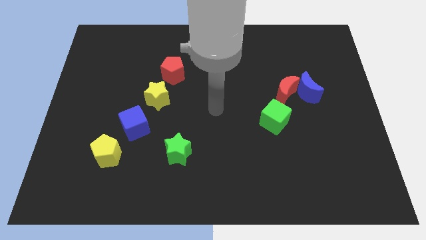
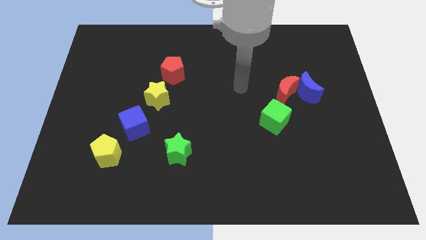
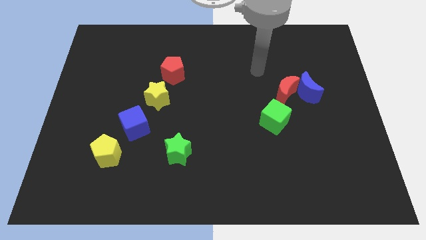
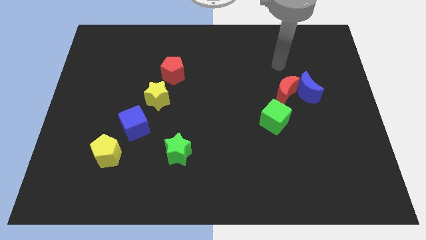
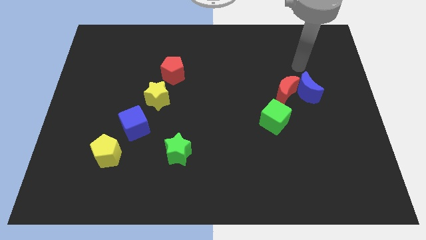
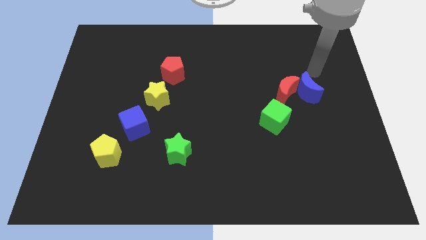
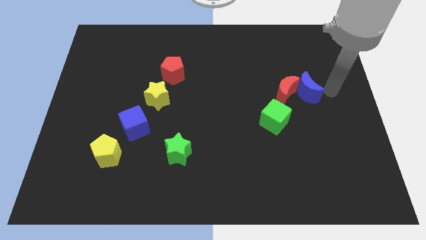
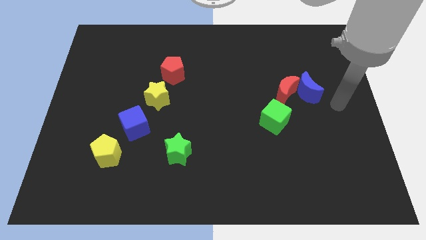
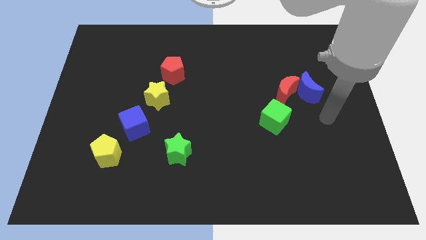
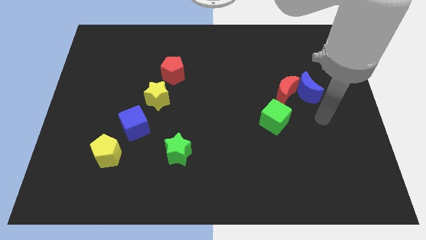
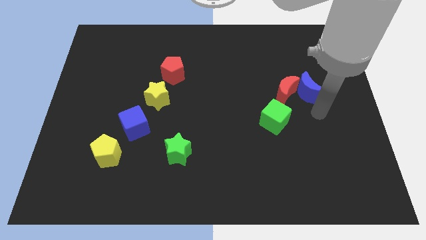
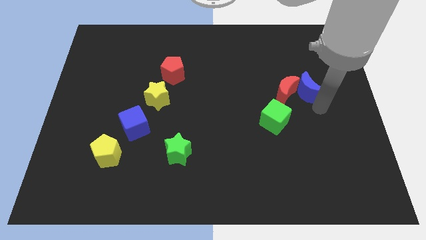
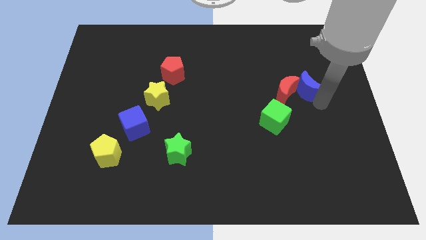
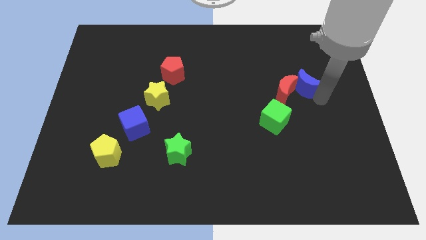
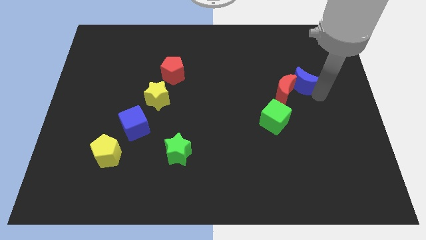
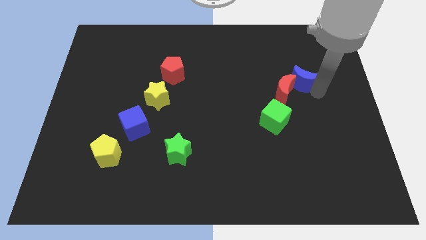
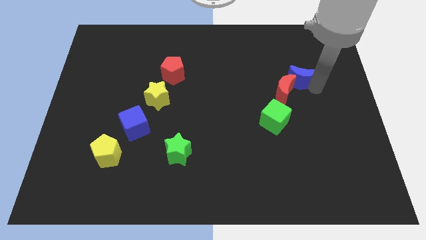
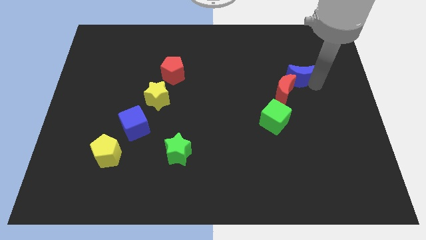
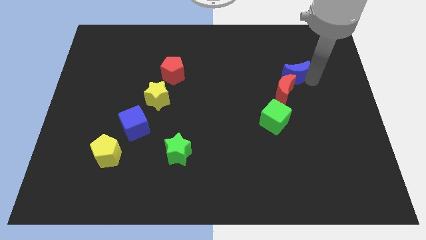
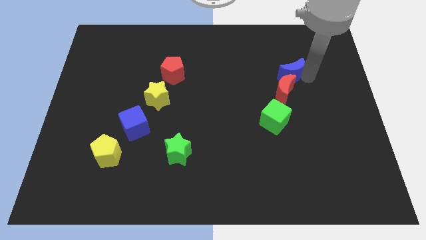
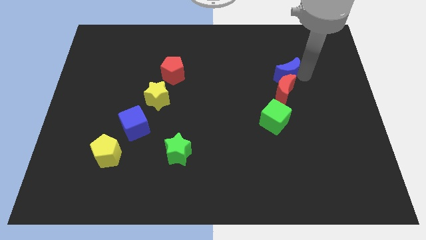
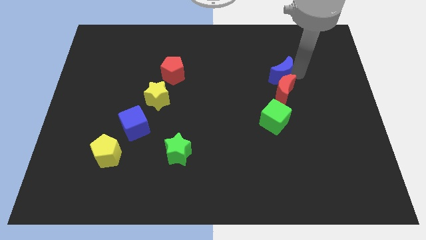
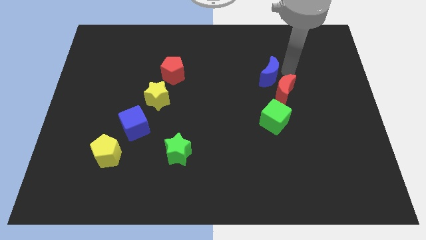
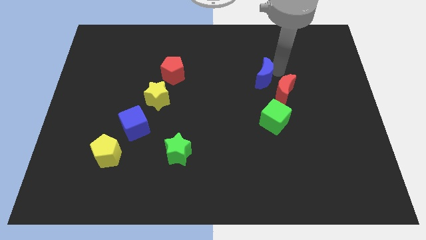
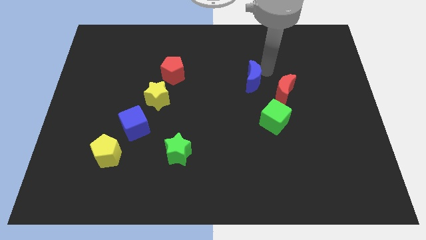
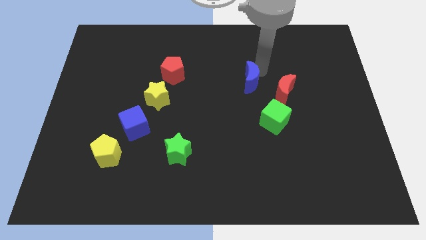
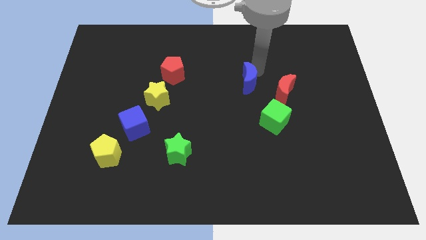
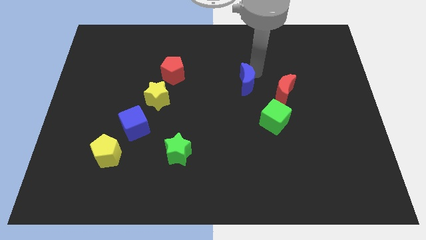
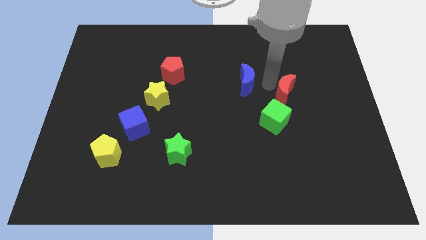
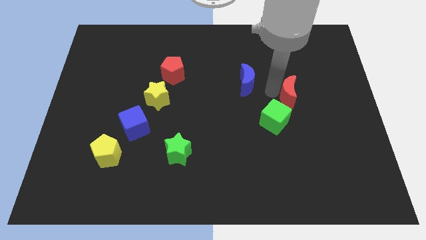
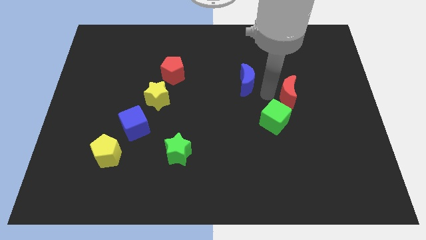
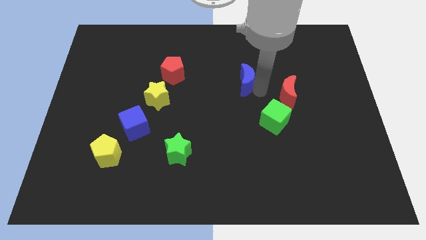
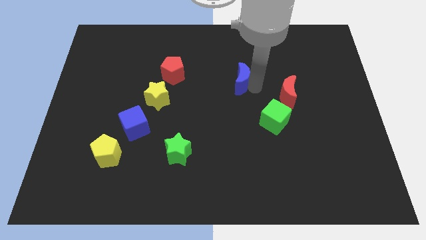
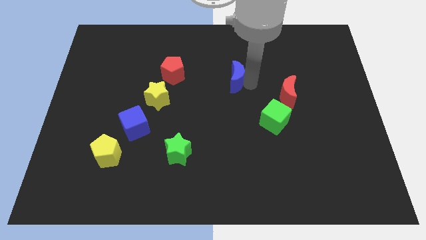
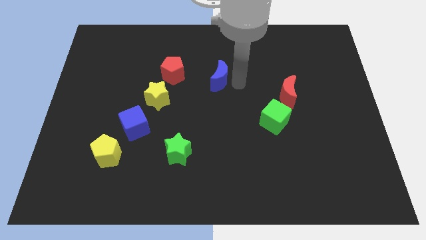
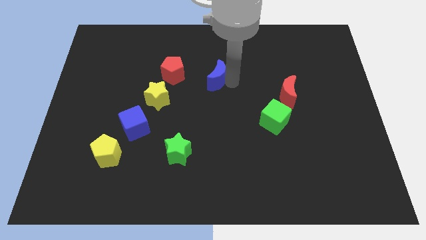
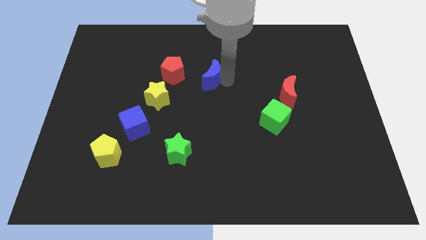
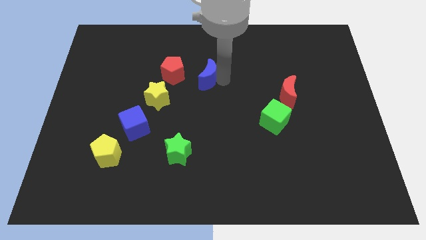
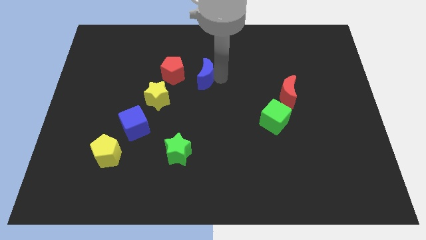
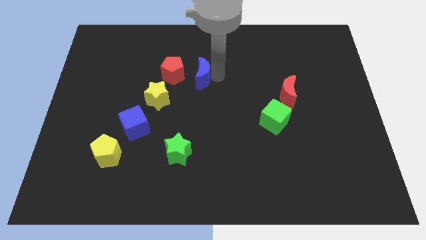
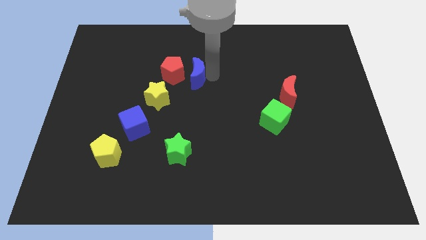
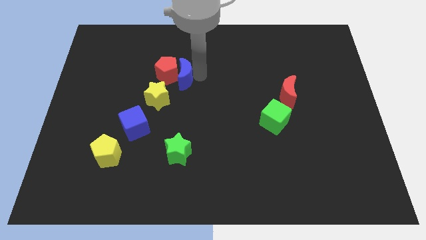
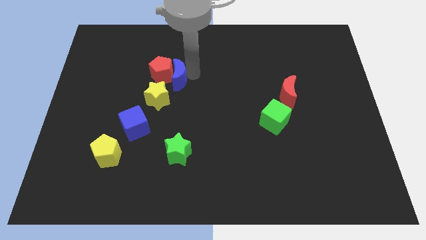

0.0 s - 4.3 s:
push the blue moon to the red pentagon

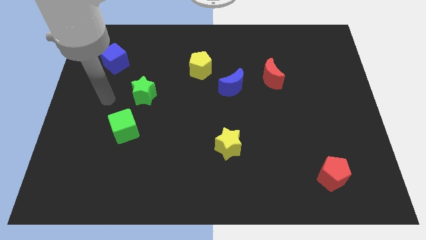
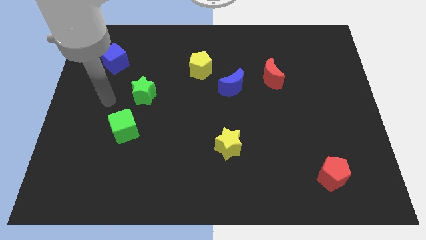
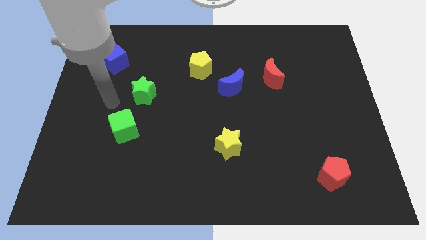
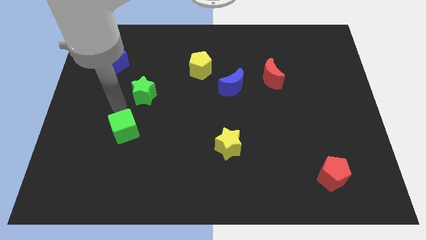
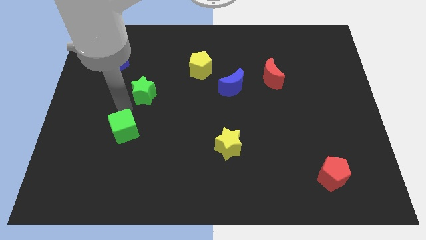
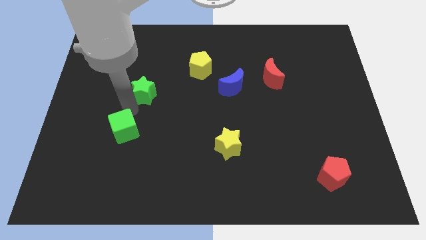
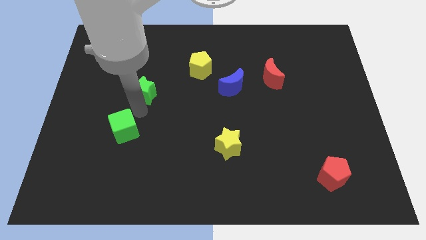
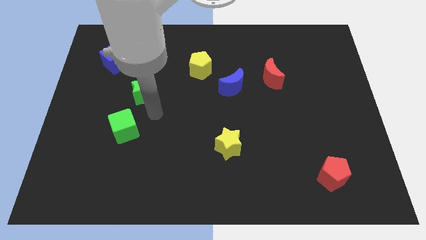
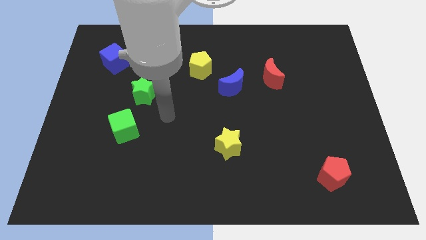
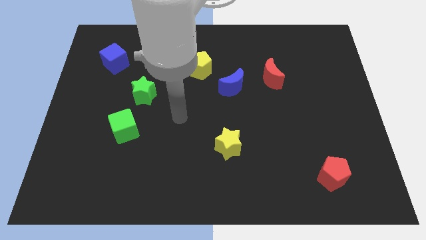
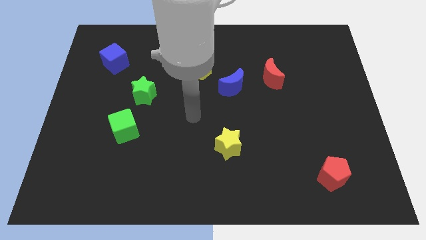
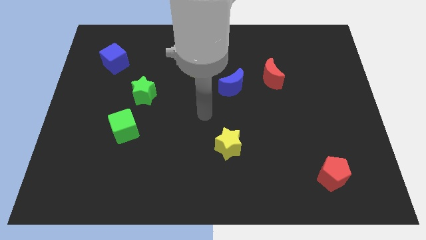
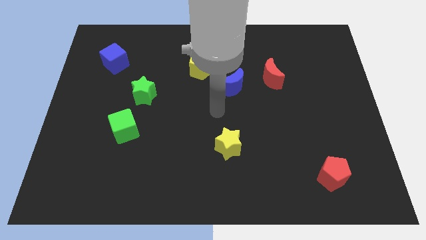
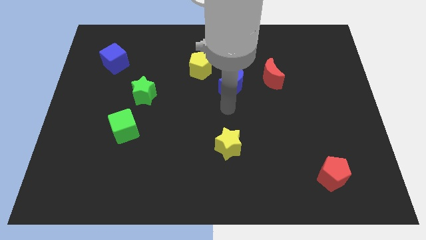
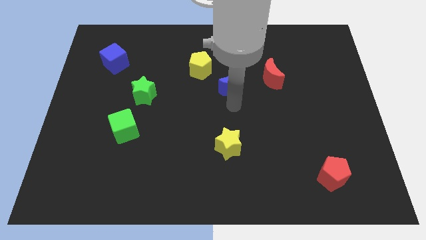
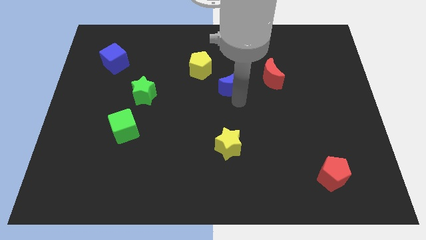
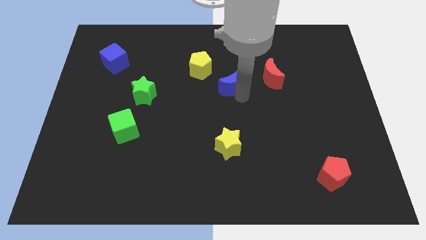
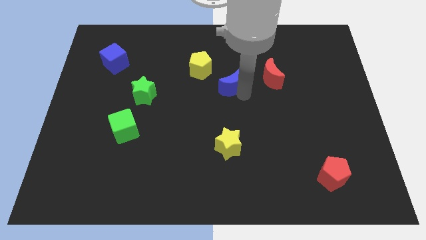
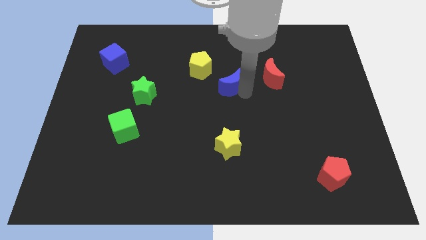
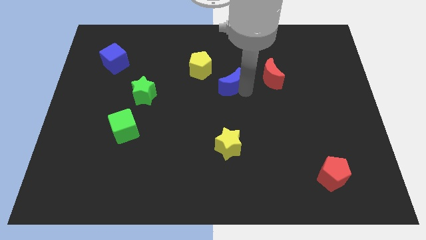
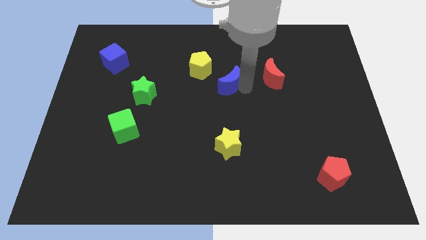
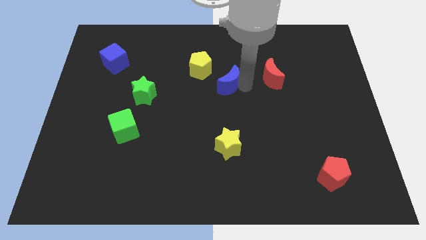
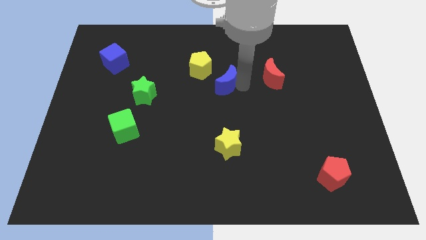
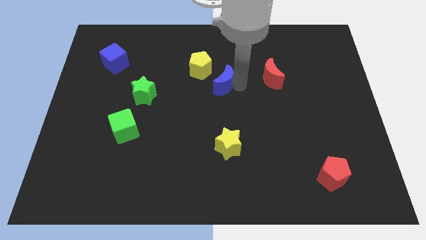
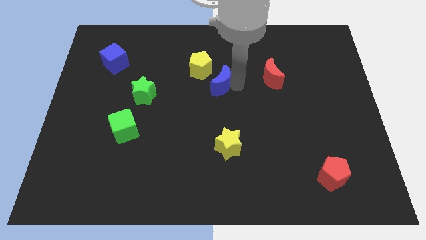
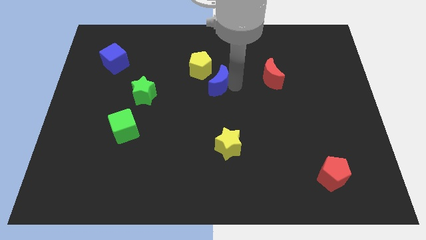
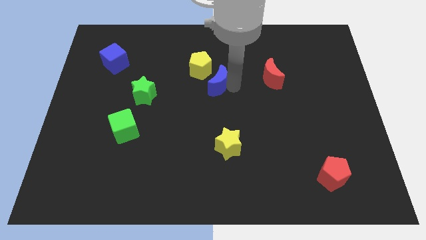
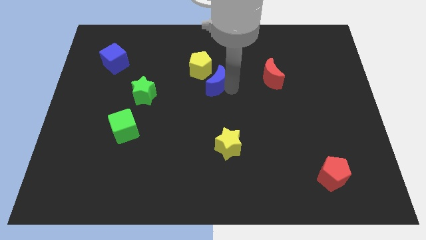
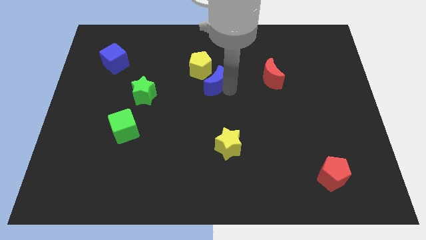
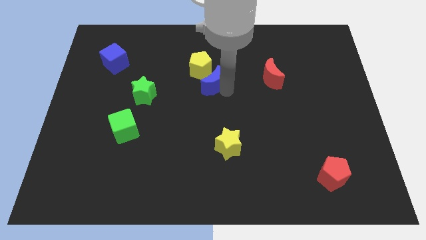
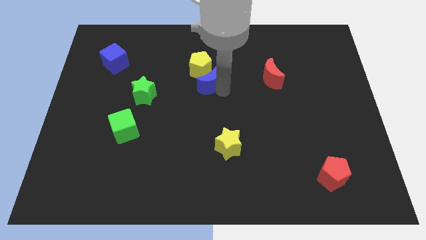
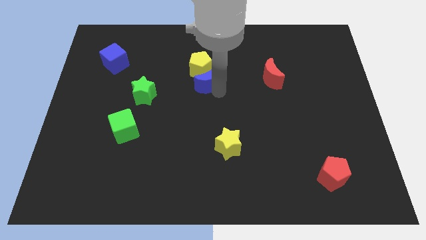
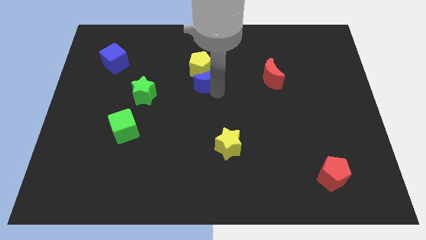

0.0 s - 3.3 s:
move the blue moon close to the yellow pentagon

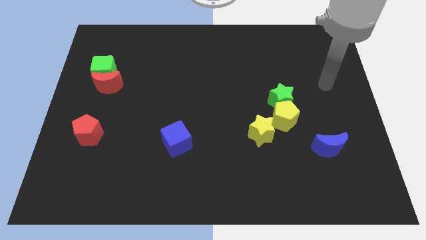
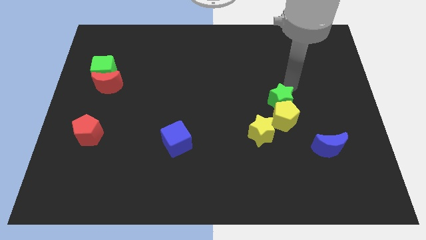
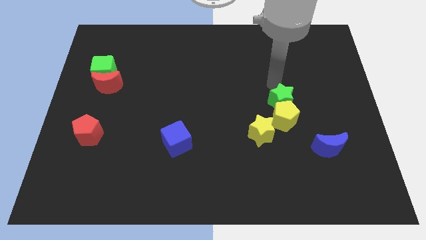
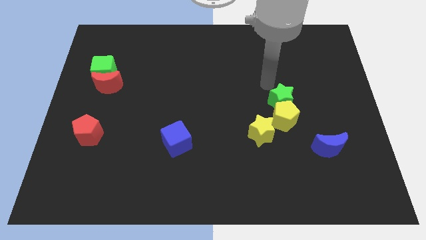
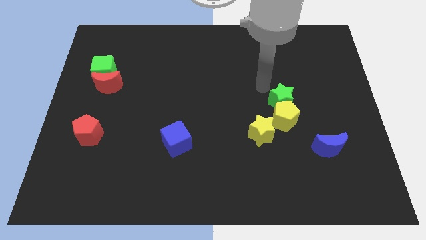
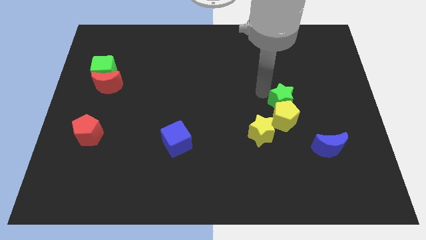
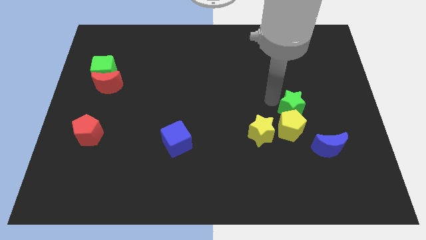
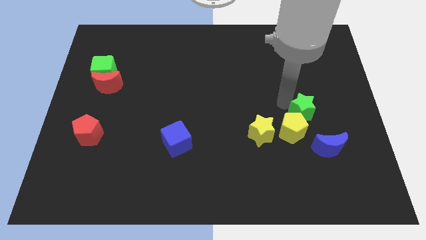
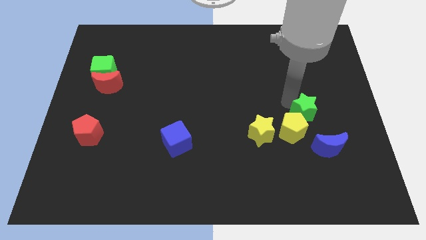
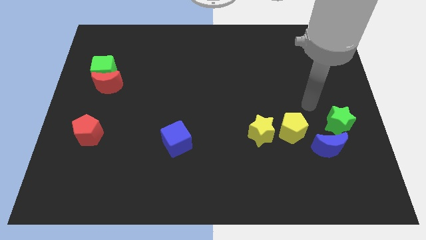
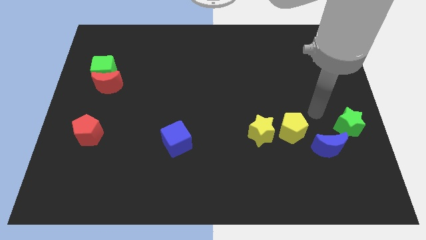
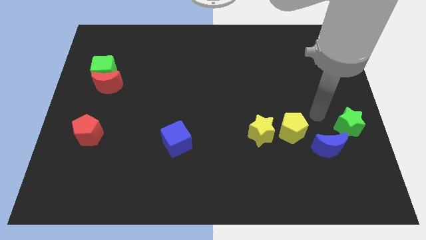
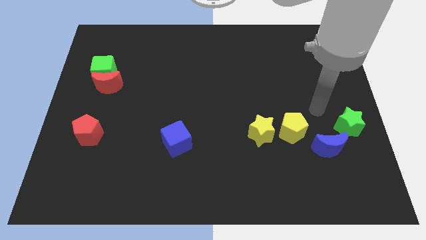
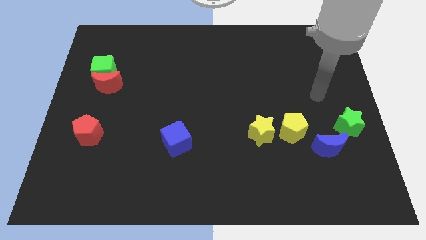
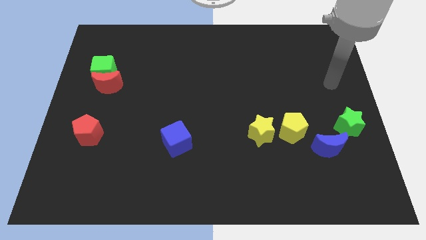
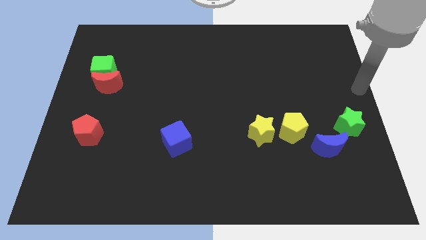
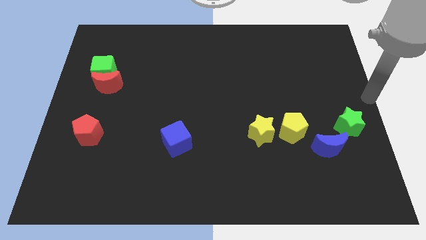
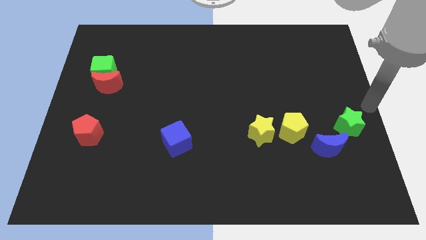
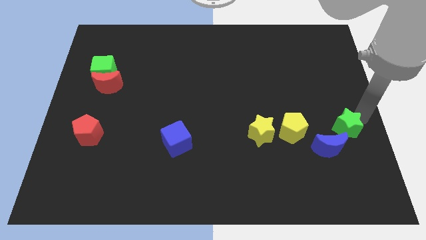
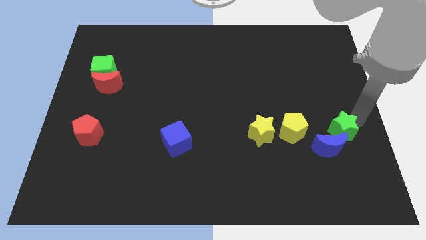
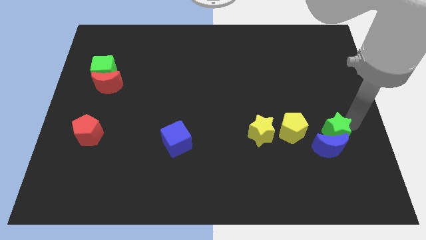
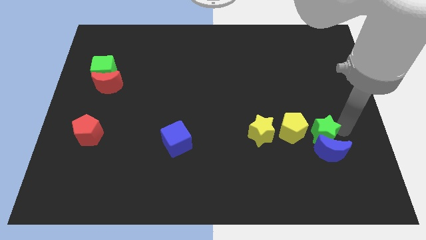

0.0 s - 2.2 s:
move the green star to the blue moon
